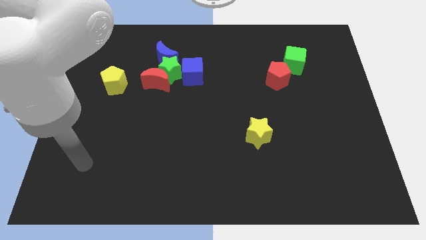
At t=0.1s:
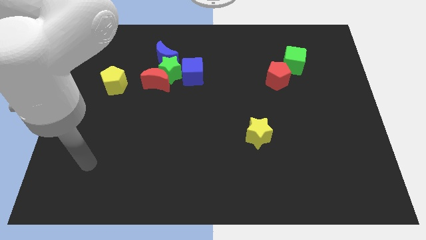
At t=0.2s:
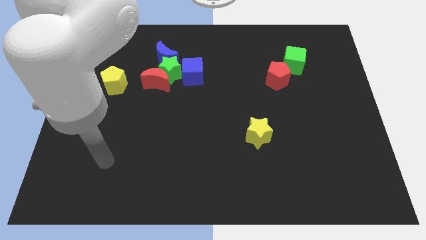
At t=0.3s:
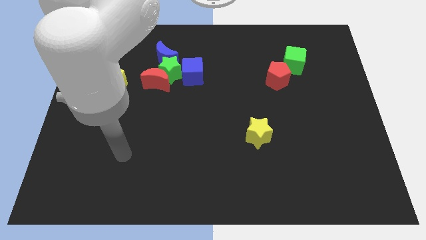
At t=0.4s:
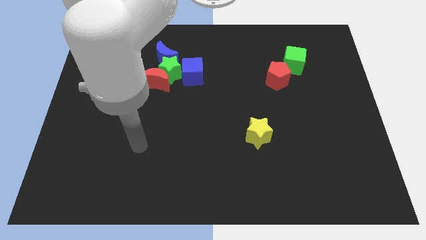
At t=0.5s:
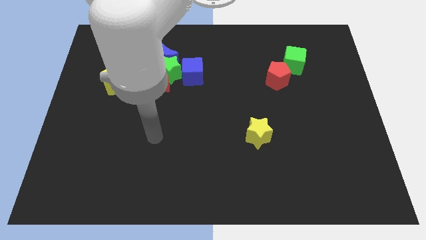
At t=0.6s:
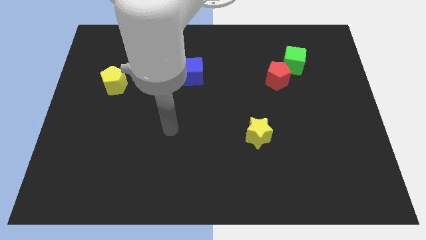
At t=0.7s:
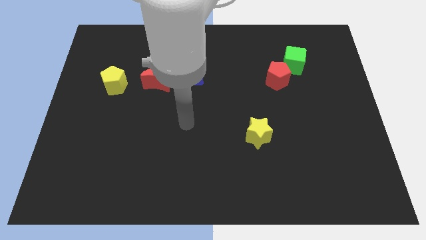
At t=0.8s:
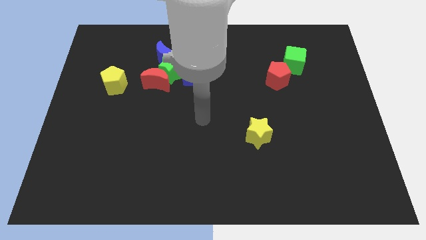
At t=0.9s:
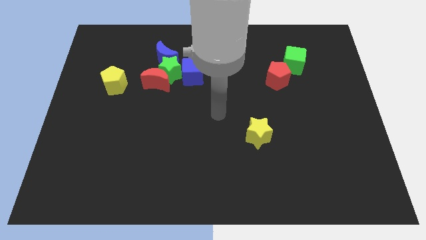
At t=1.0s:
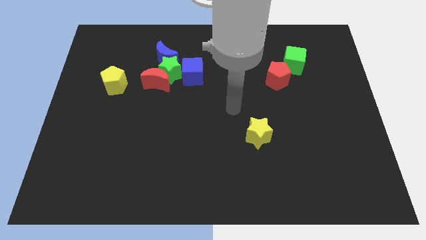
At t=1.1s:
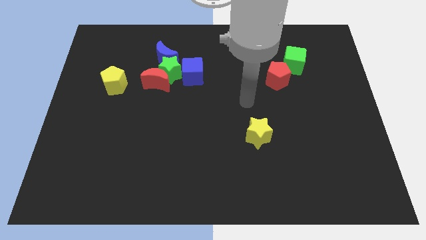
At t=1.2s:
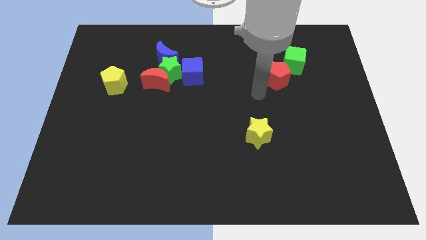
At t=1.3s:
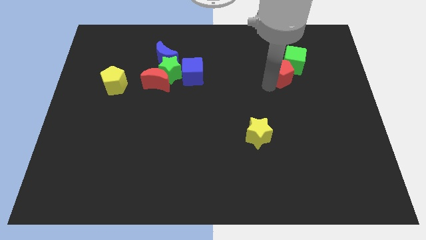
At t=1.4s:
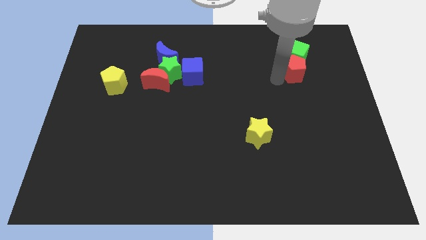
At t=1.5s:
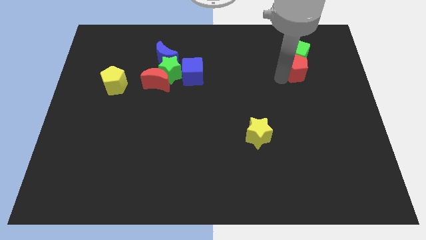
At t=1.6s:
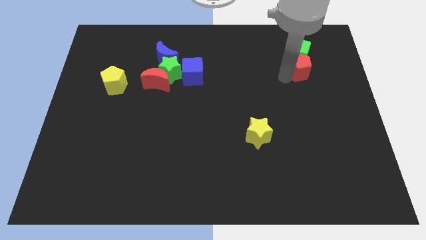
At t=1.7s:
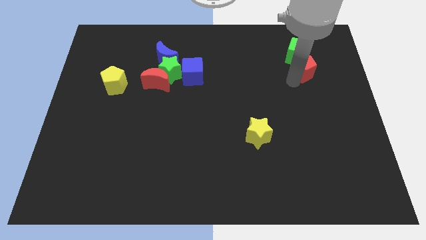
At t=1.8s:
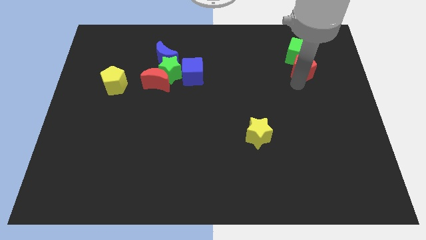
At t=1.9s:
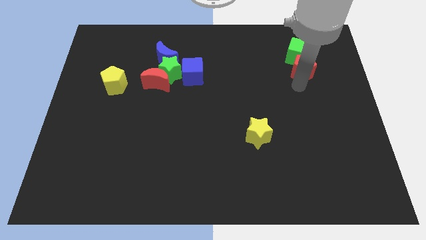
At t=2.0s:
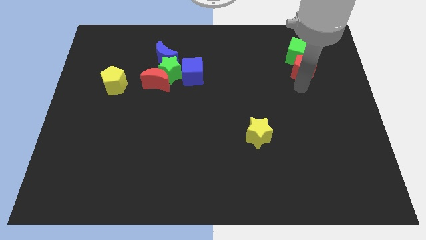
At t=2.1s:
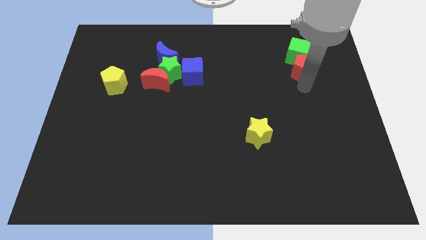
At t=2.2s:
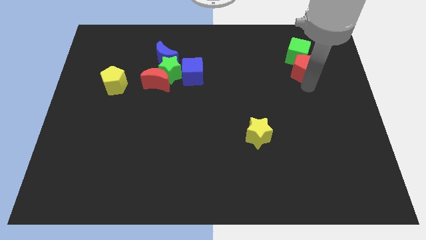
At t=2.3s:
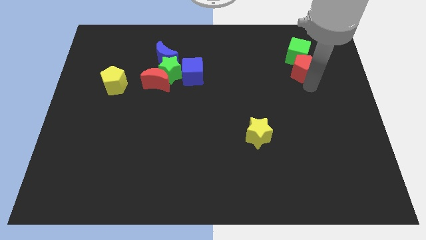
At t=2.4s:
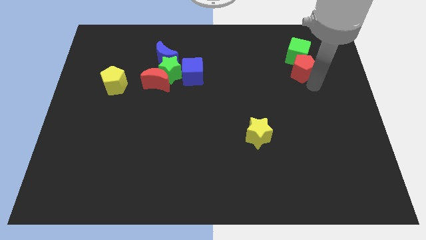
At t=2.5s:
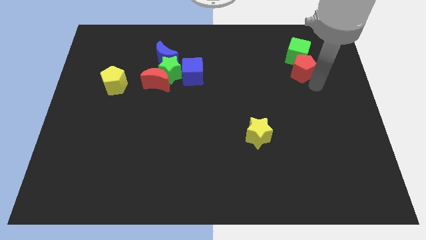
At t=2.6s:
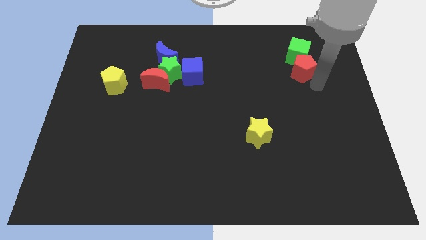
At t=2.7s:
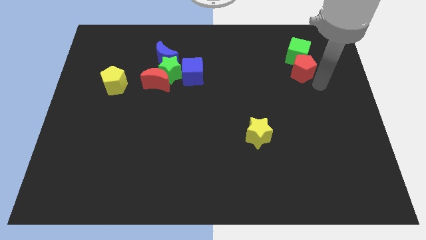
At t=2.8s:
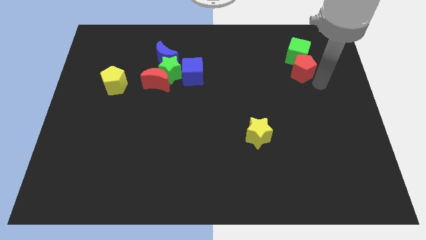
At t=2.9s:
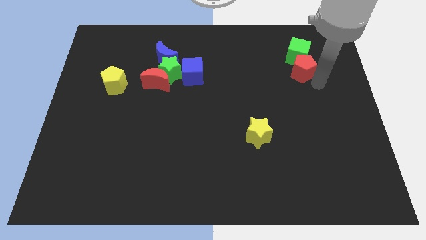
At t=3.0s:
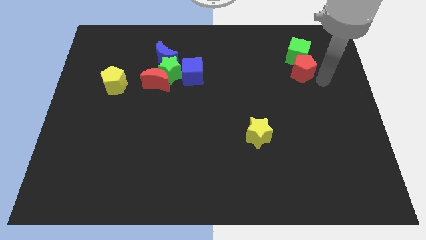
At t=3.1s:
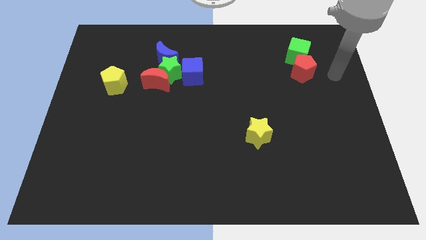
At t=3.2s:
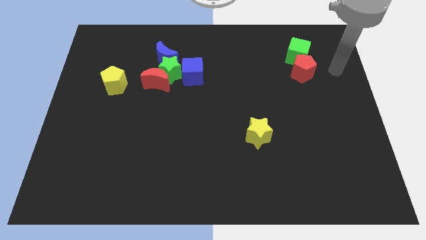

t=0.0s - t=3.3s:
move the red pentagon into the green cube

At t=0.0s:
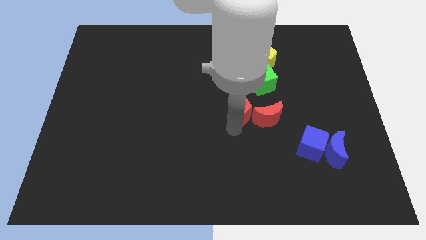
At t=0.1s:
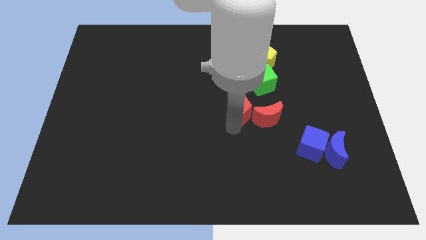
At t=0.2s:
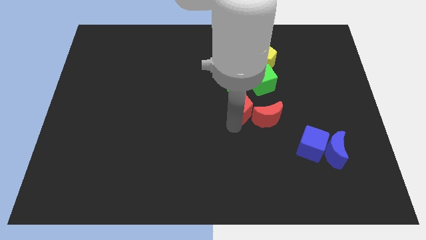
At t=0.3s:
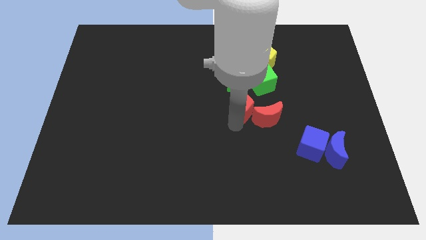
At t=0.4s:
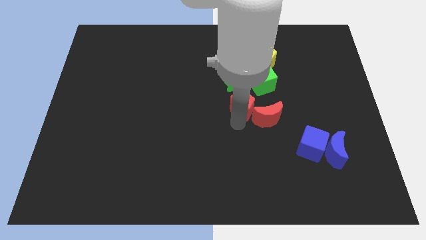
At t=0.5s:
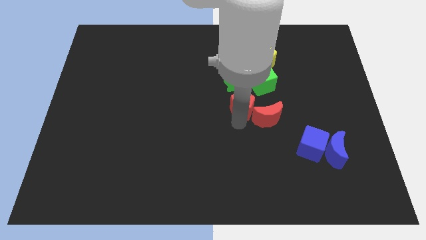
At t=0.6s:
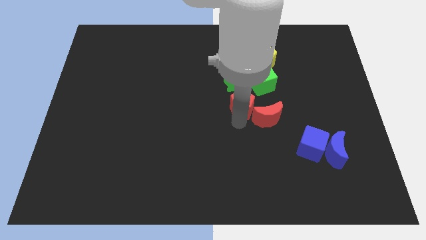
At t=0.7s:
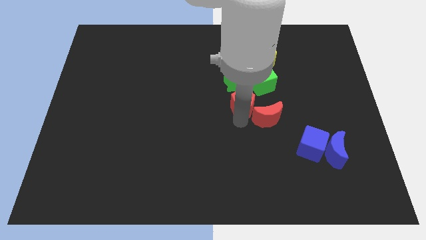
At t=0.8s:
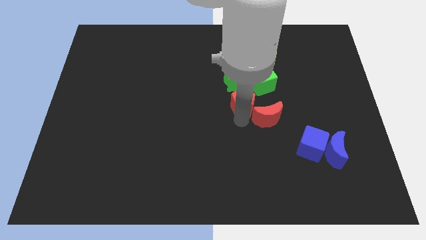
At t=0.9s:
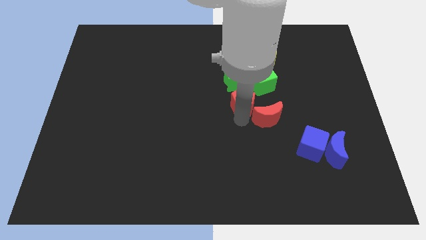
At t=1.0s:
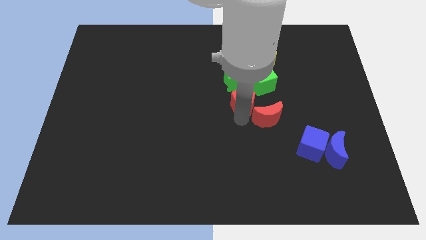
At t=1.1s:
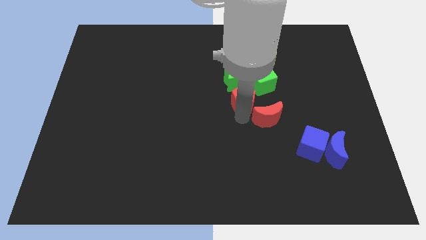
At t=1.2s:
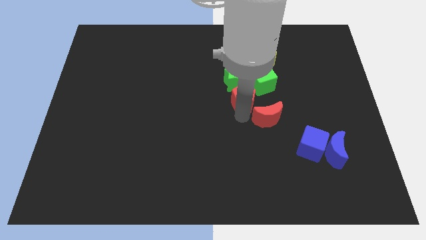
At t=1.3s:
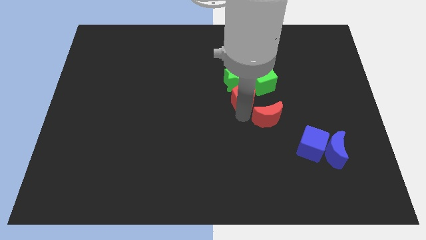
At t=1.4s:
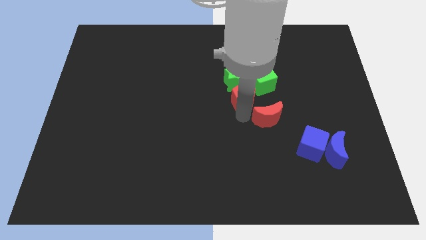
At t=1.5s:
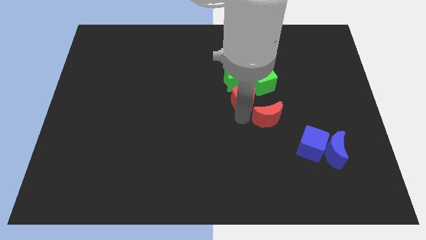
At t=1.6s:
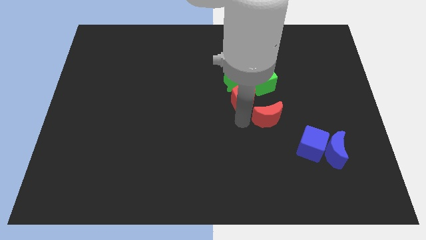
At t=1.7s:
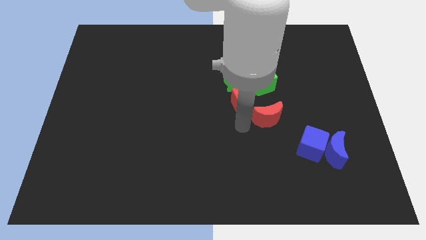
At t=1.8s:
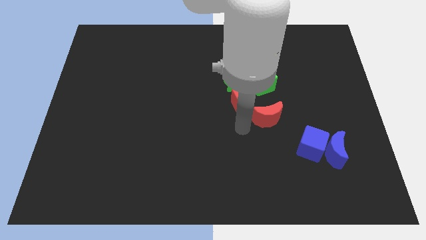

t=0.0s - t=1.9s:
move red pentagon to the bottom of green star

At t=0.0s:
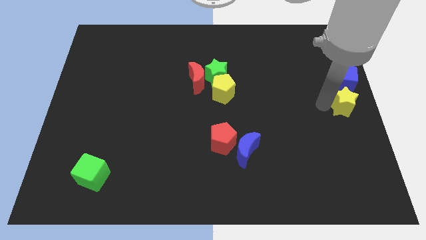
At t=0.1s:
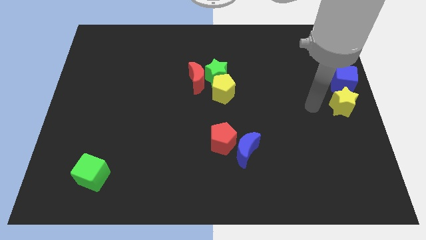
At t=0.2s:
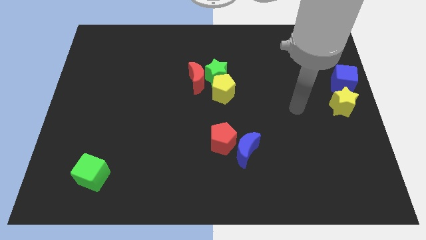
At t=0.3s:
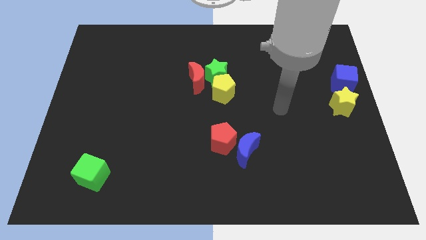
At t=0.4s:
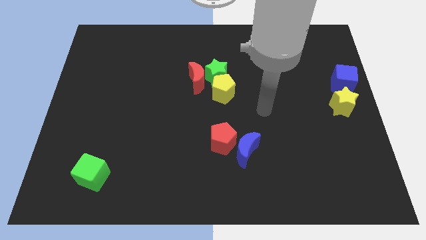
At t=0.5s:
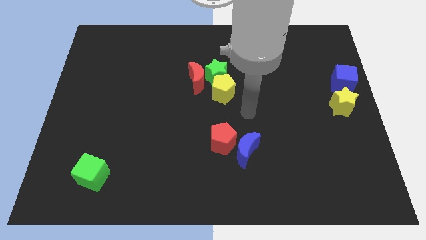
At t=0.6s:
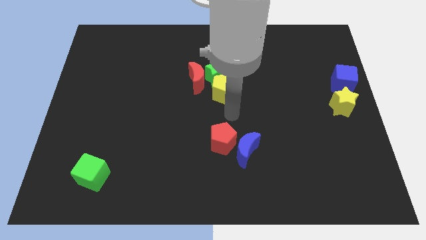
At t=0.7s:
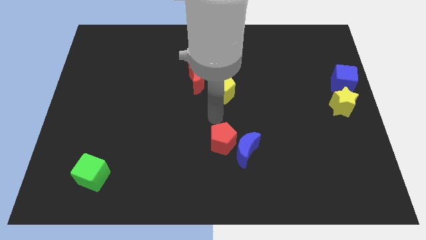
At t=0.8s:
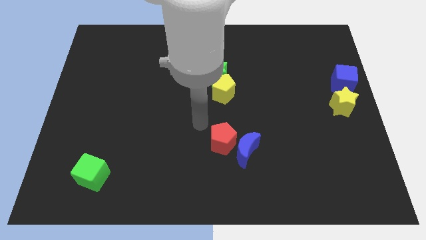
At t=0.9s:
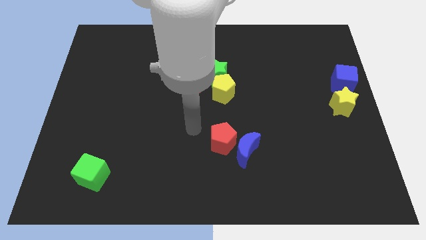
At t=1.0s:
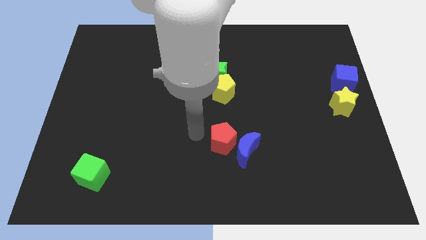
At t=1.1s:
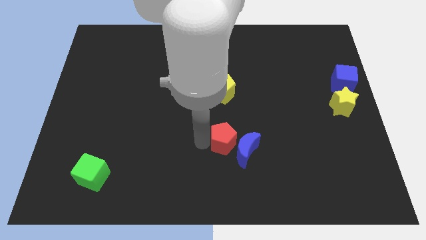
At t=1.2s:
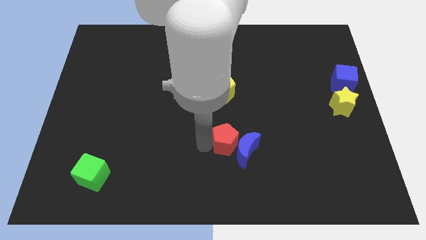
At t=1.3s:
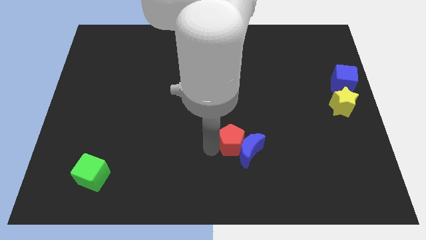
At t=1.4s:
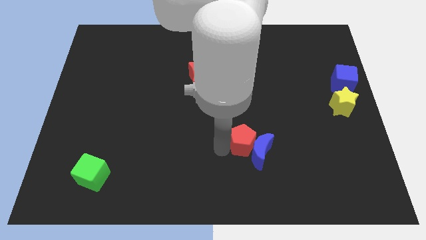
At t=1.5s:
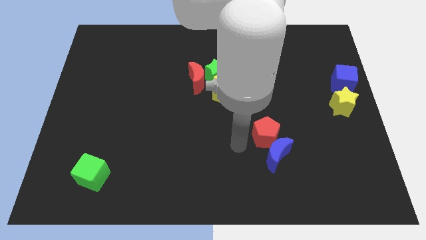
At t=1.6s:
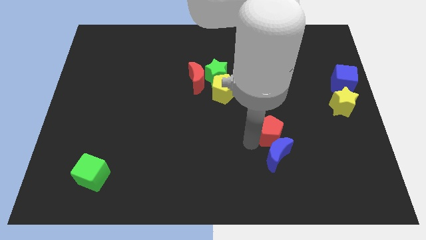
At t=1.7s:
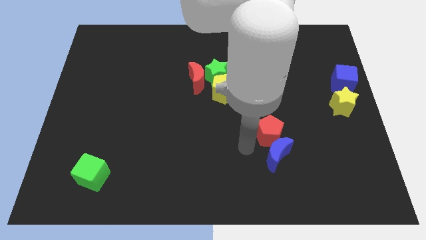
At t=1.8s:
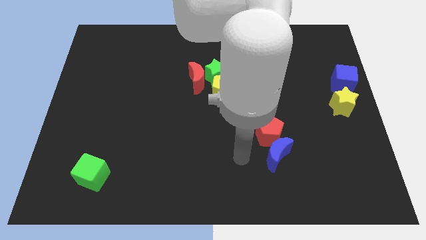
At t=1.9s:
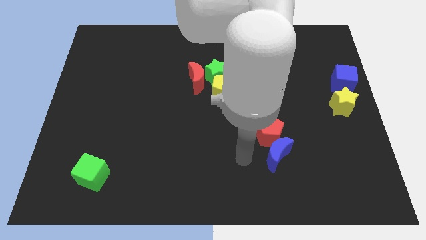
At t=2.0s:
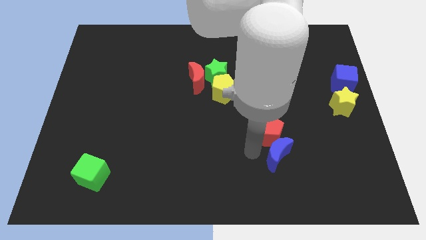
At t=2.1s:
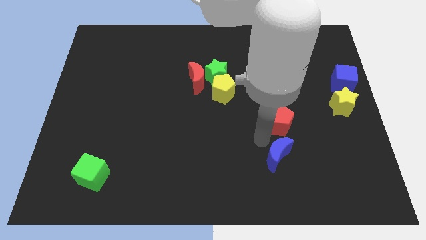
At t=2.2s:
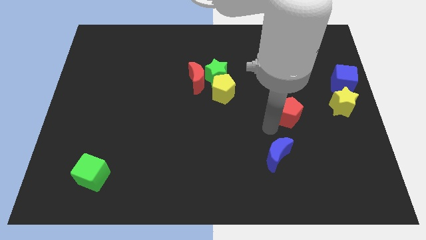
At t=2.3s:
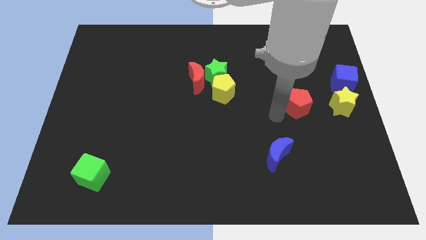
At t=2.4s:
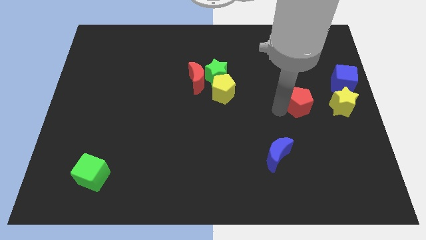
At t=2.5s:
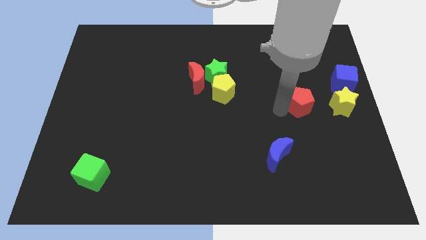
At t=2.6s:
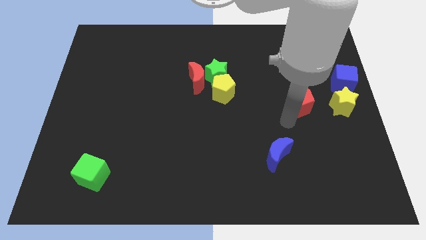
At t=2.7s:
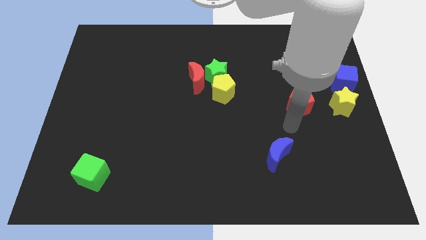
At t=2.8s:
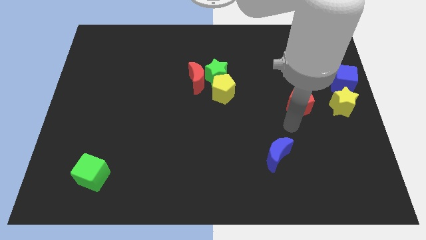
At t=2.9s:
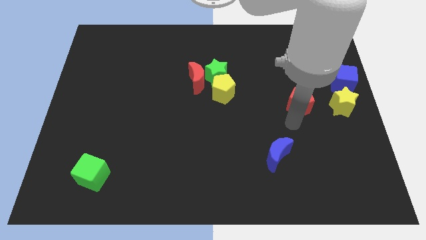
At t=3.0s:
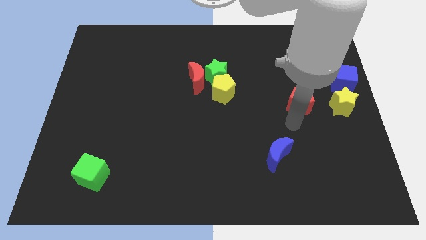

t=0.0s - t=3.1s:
move the red pentagon to the left of the yellow star

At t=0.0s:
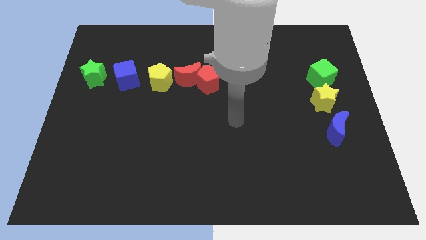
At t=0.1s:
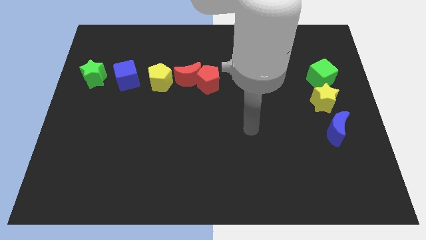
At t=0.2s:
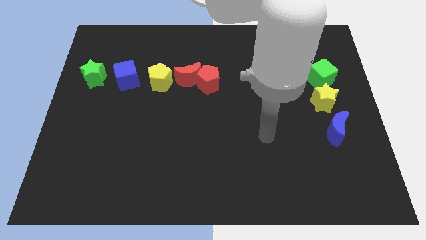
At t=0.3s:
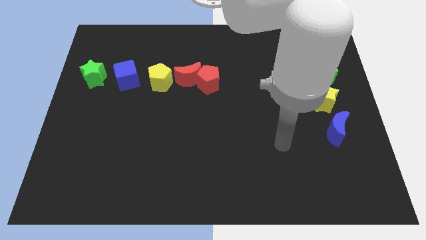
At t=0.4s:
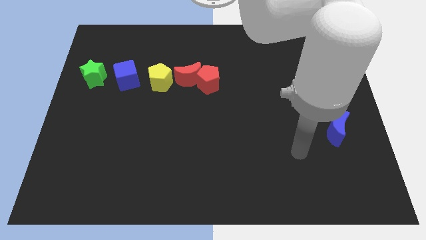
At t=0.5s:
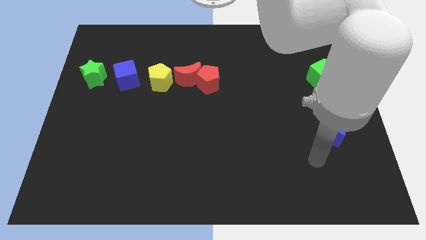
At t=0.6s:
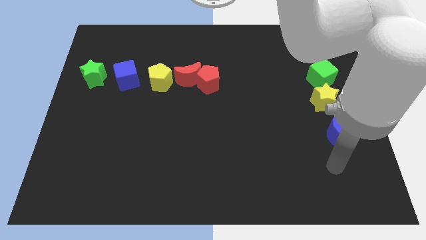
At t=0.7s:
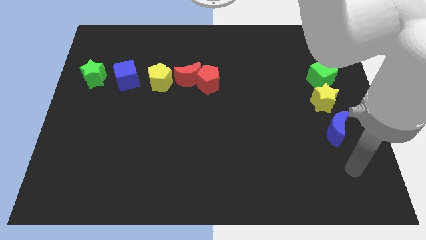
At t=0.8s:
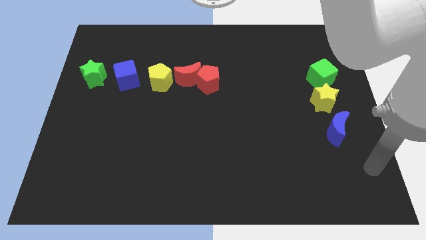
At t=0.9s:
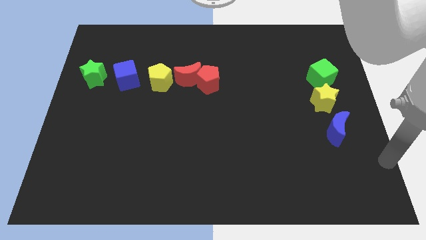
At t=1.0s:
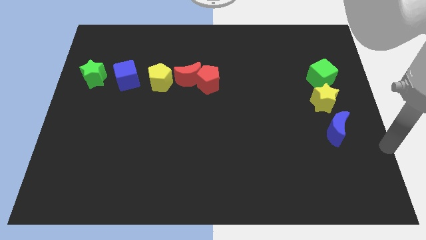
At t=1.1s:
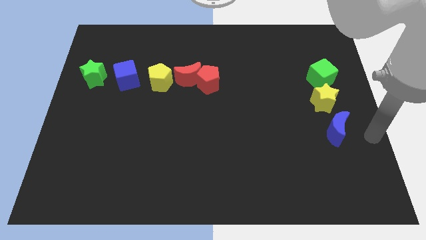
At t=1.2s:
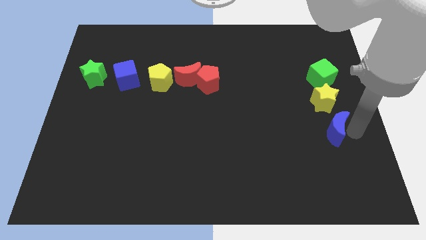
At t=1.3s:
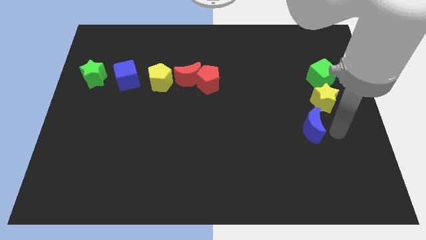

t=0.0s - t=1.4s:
move your arm right beside the blue moon
